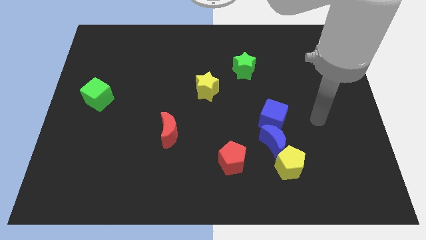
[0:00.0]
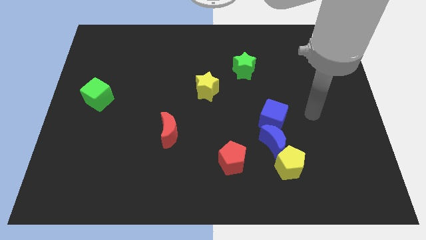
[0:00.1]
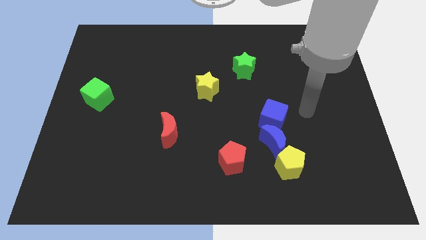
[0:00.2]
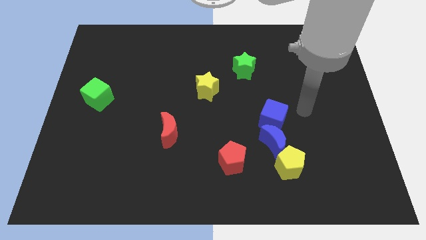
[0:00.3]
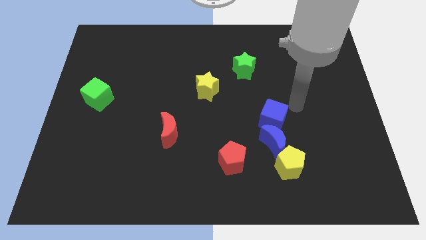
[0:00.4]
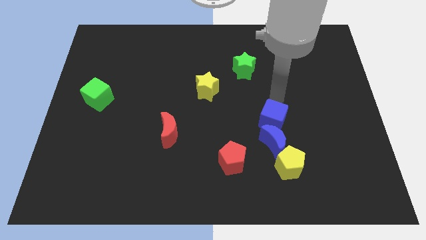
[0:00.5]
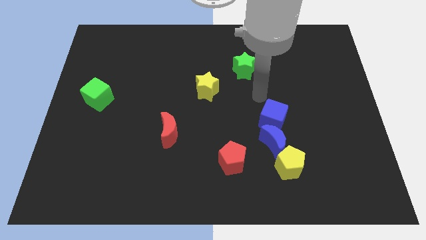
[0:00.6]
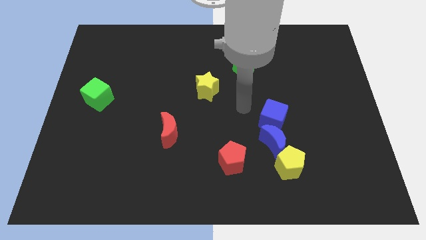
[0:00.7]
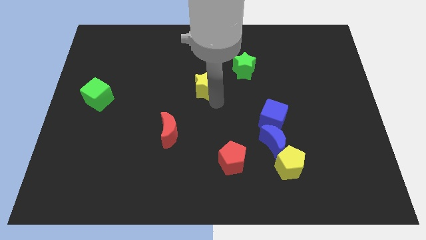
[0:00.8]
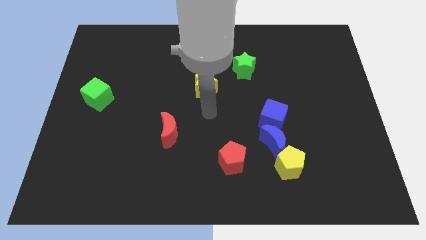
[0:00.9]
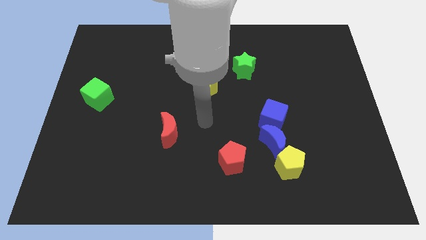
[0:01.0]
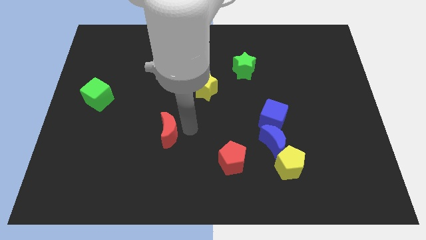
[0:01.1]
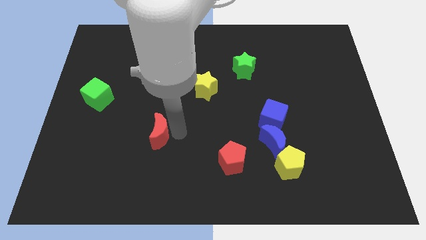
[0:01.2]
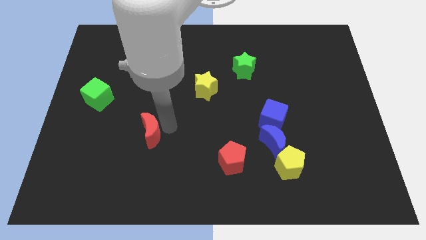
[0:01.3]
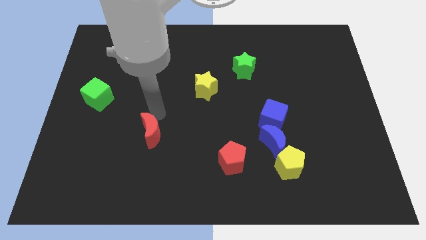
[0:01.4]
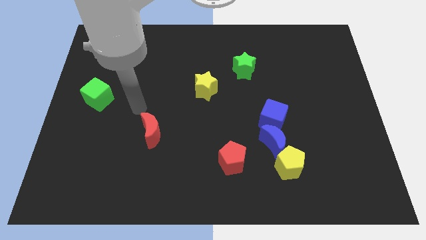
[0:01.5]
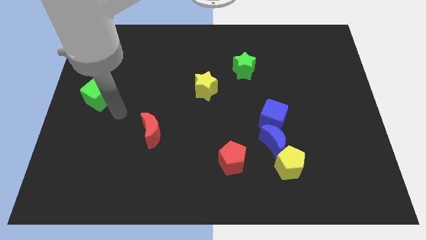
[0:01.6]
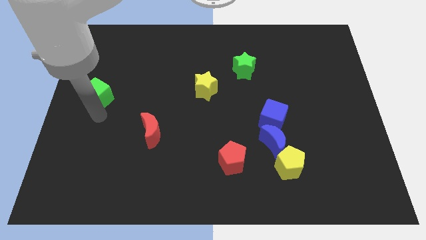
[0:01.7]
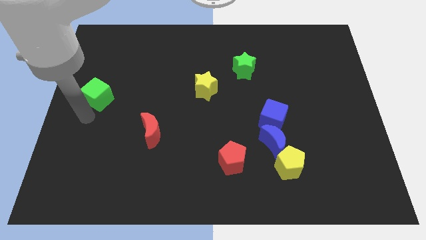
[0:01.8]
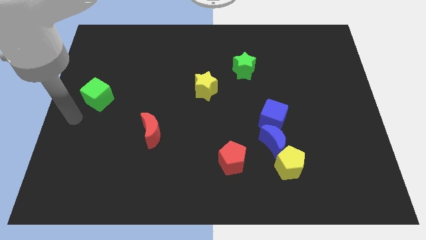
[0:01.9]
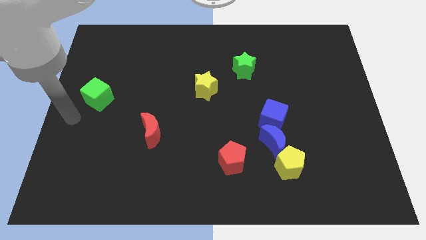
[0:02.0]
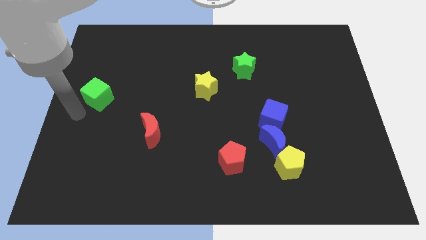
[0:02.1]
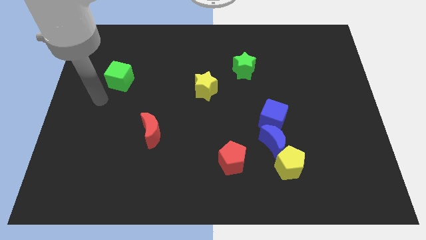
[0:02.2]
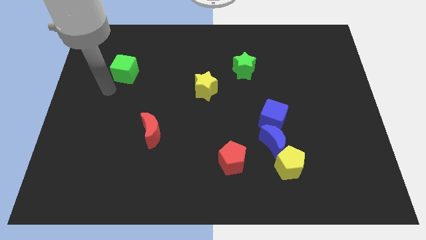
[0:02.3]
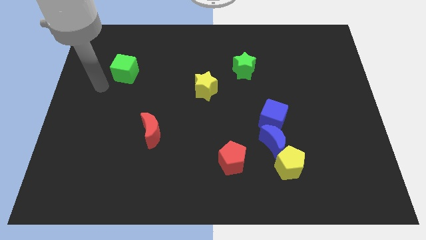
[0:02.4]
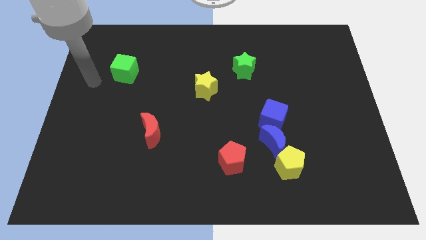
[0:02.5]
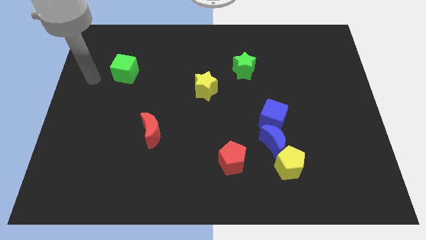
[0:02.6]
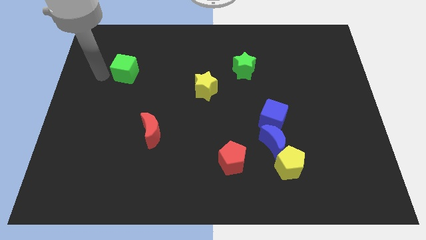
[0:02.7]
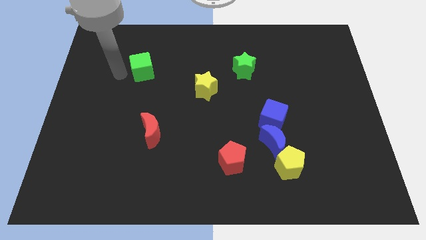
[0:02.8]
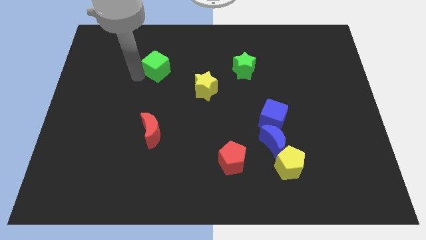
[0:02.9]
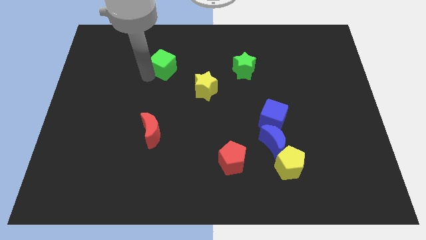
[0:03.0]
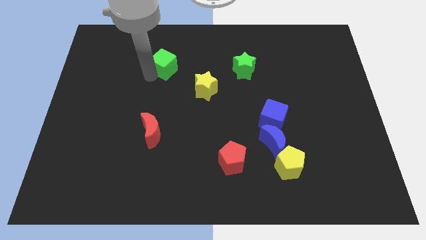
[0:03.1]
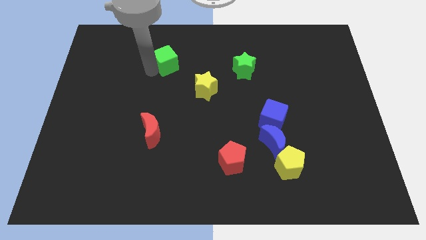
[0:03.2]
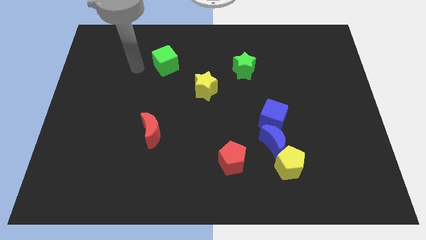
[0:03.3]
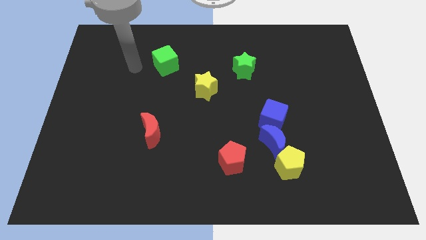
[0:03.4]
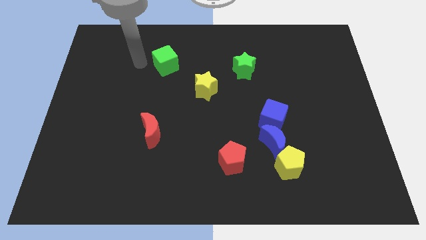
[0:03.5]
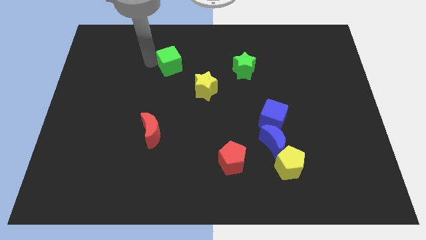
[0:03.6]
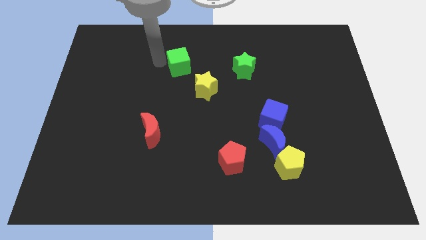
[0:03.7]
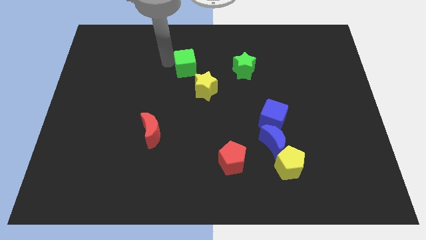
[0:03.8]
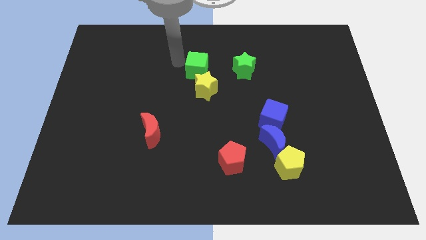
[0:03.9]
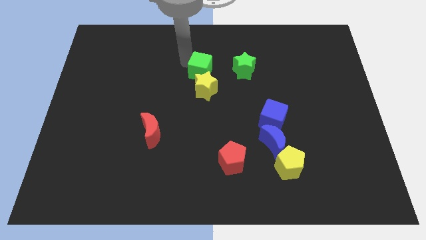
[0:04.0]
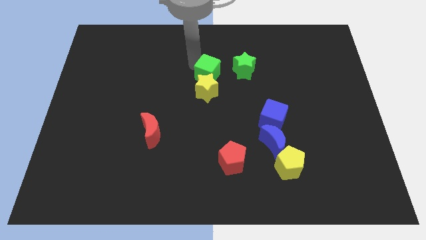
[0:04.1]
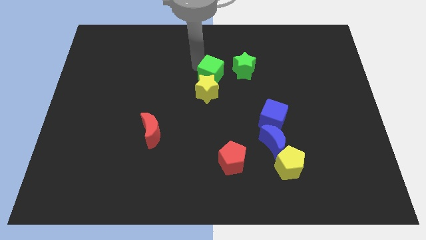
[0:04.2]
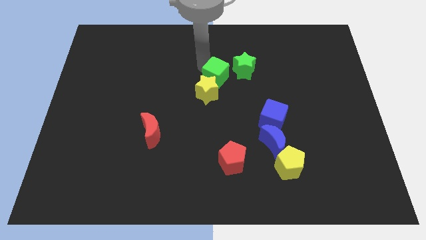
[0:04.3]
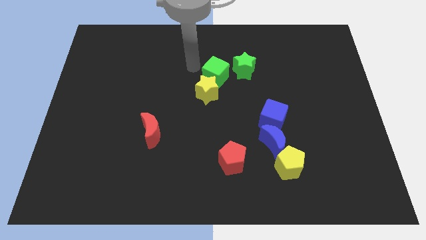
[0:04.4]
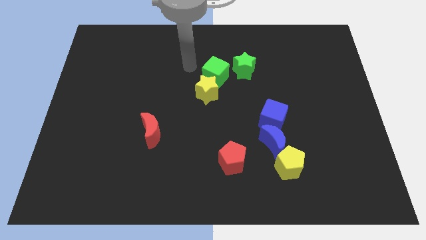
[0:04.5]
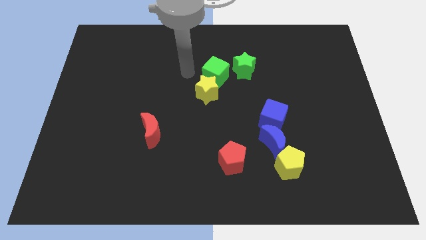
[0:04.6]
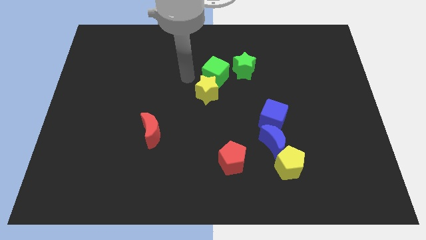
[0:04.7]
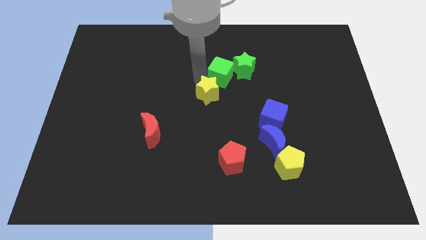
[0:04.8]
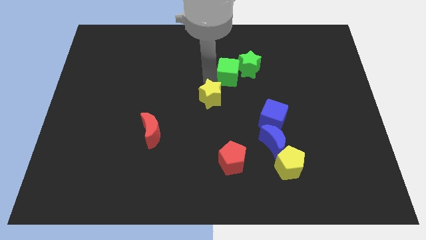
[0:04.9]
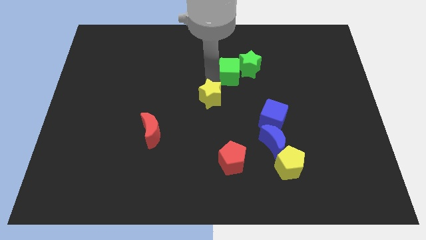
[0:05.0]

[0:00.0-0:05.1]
slide the green cube next to the green star

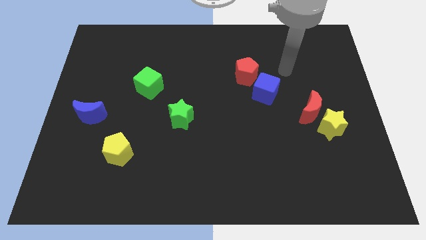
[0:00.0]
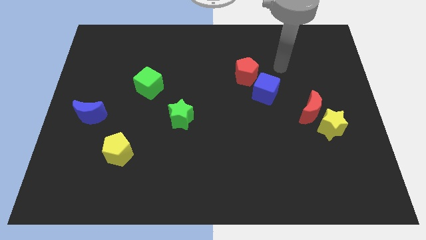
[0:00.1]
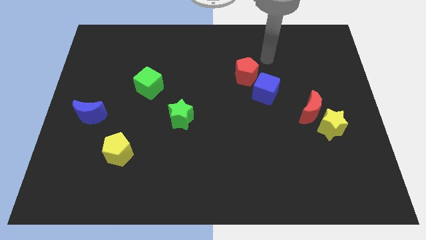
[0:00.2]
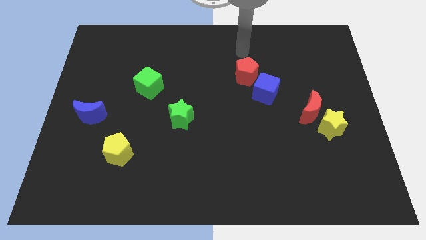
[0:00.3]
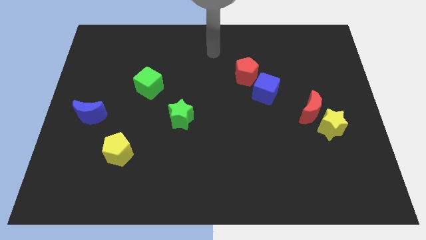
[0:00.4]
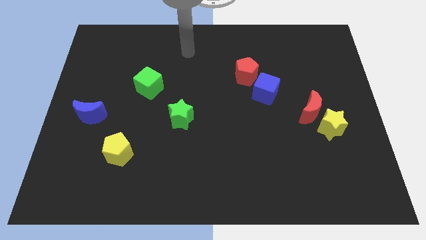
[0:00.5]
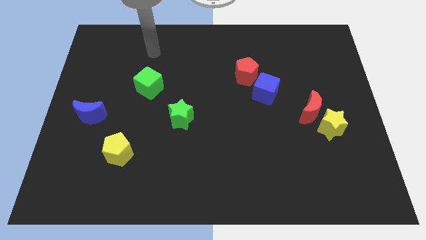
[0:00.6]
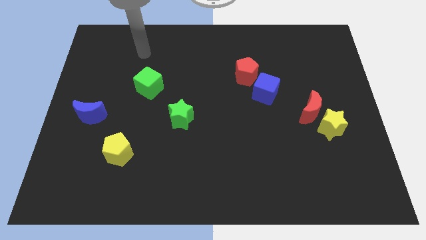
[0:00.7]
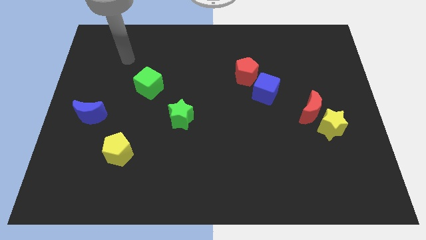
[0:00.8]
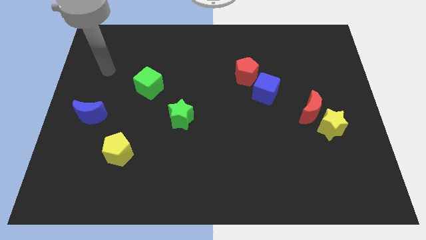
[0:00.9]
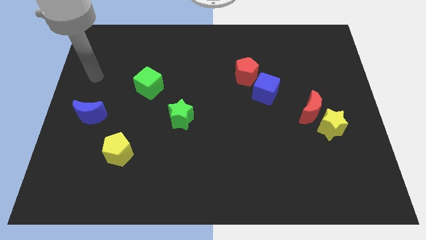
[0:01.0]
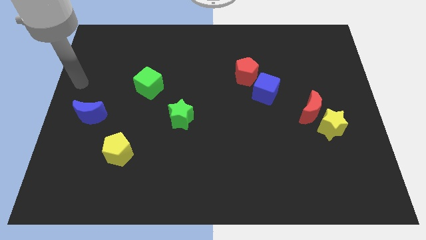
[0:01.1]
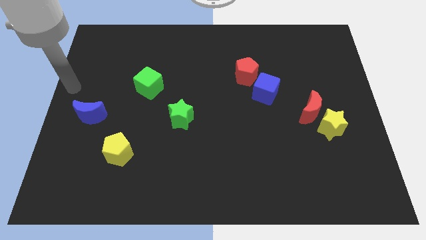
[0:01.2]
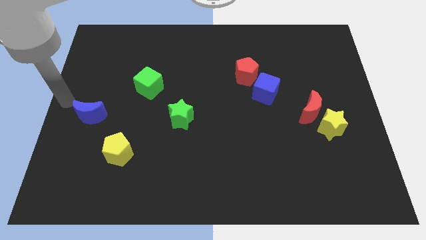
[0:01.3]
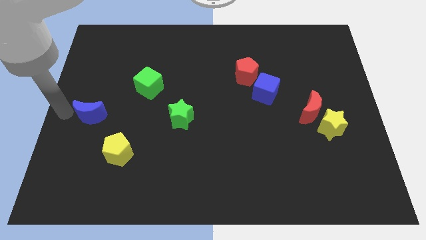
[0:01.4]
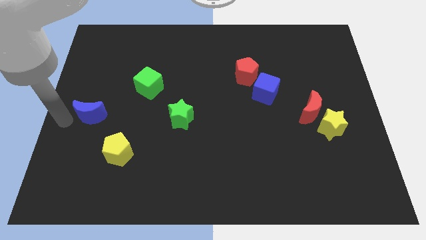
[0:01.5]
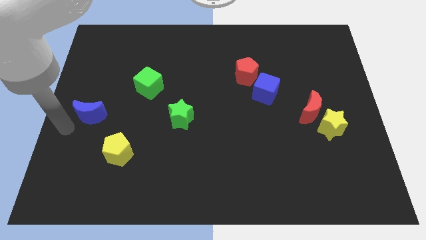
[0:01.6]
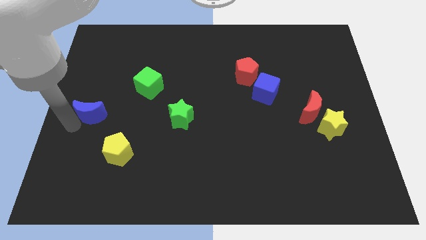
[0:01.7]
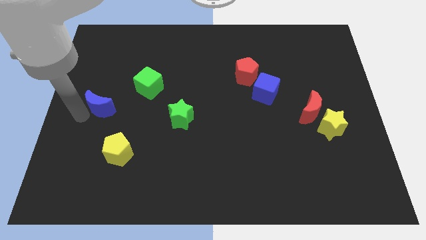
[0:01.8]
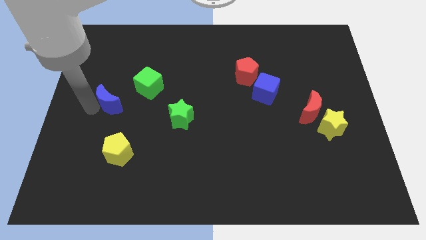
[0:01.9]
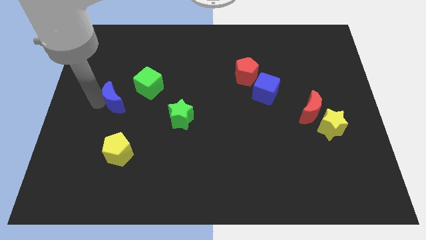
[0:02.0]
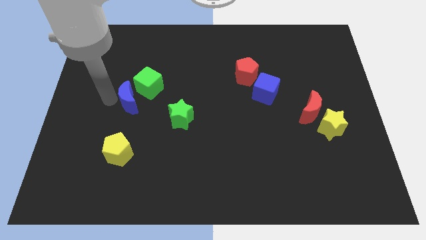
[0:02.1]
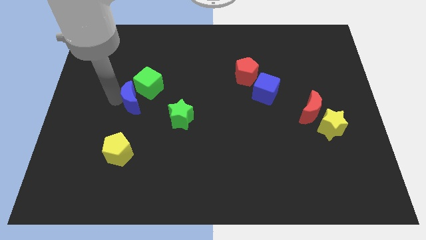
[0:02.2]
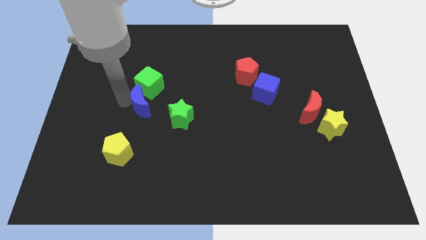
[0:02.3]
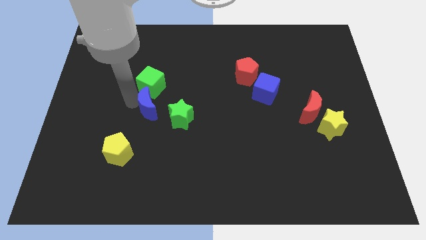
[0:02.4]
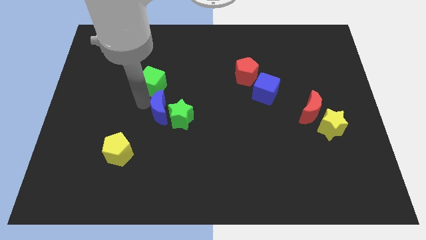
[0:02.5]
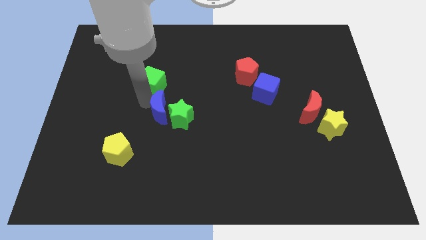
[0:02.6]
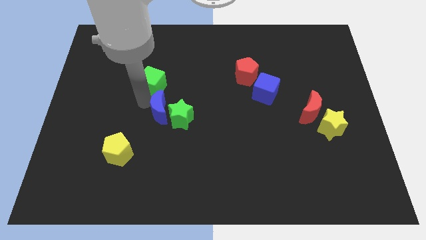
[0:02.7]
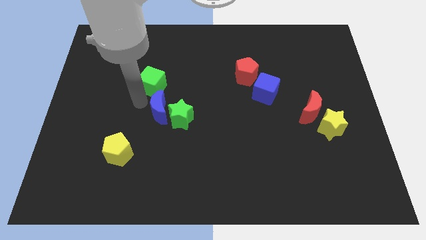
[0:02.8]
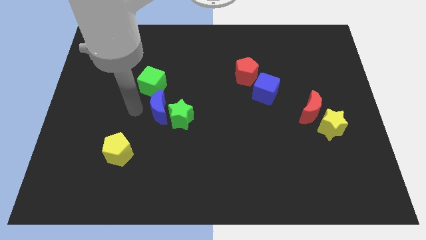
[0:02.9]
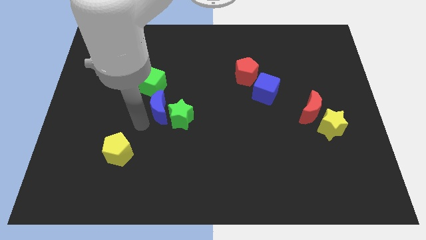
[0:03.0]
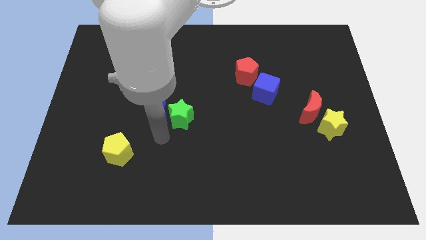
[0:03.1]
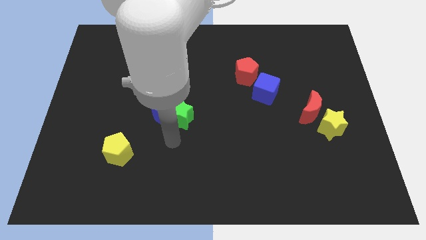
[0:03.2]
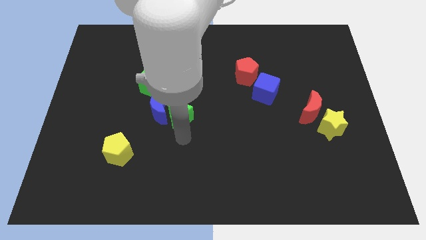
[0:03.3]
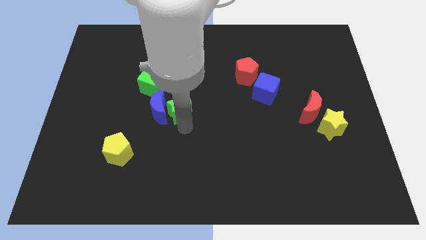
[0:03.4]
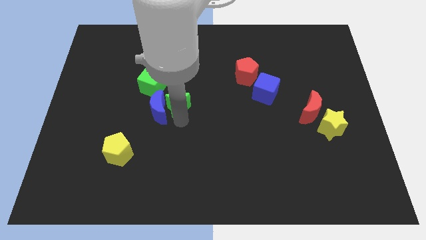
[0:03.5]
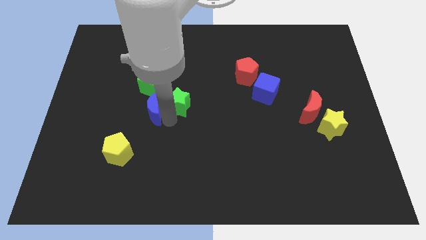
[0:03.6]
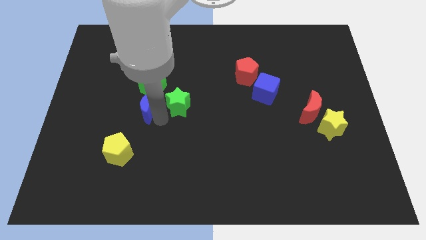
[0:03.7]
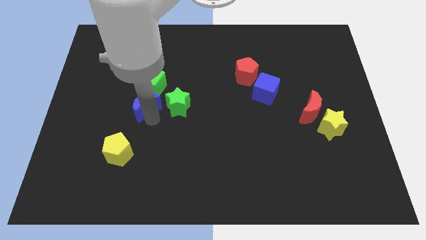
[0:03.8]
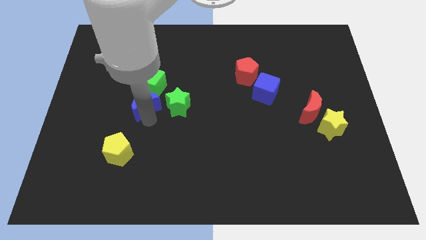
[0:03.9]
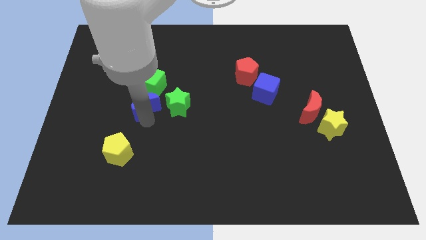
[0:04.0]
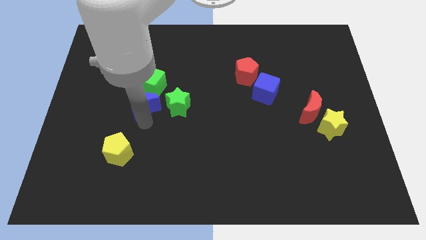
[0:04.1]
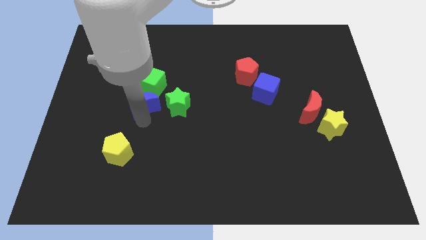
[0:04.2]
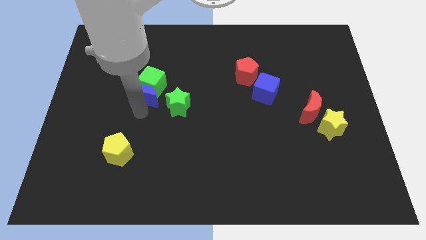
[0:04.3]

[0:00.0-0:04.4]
move the blue moon towards the green cube
